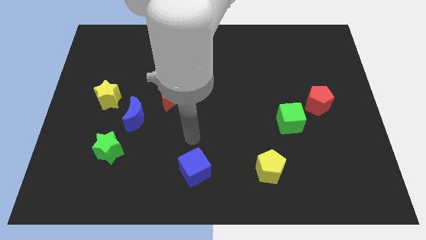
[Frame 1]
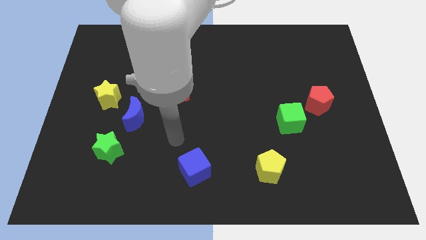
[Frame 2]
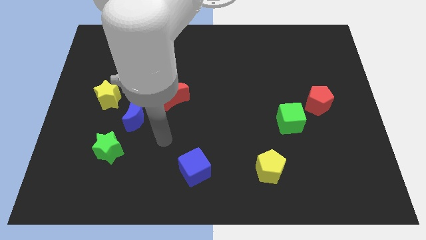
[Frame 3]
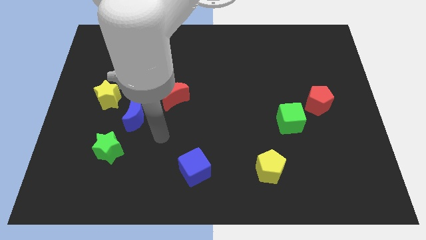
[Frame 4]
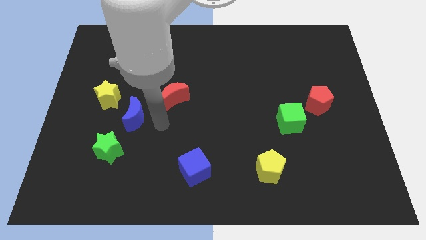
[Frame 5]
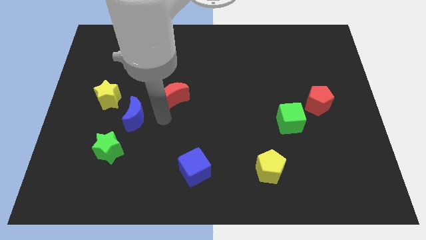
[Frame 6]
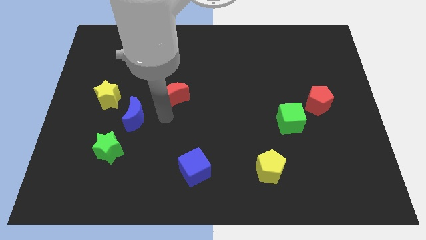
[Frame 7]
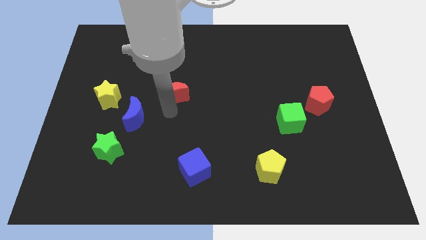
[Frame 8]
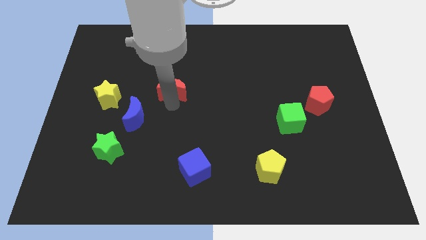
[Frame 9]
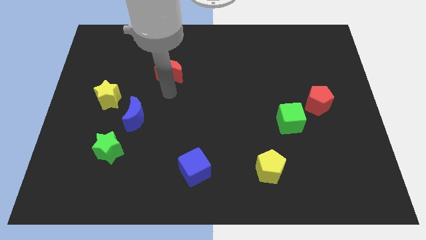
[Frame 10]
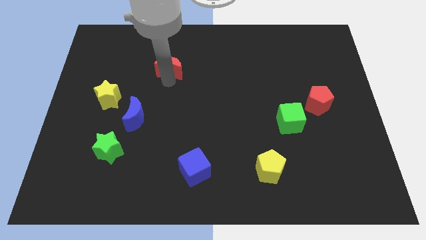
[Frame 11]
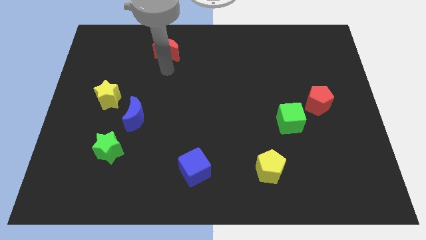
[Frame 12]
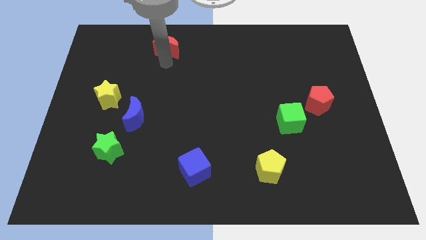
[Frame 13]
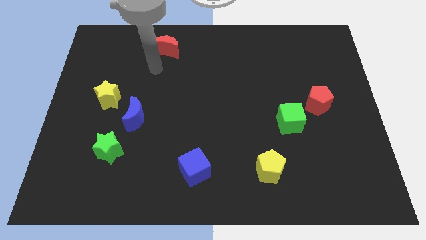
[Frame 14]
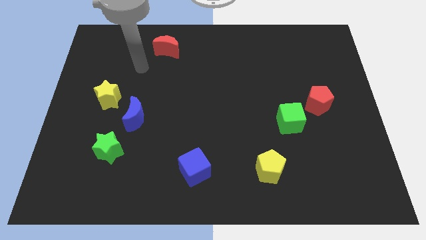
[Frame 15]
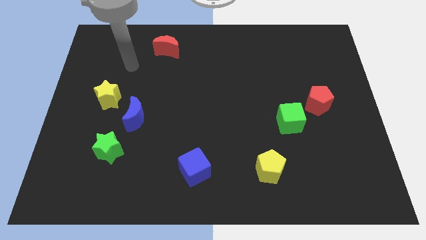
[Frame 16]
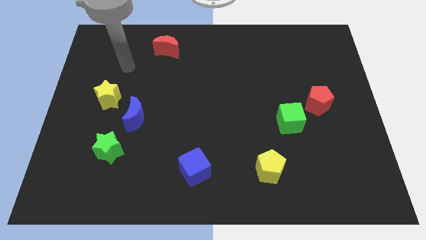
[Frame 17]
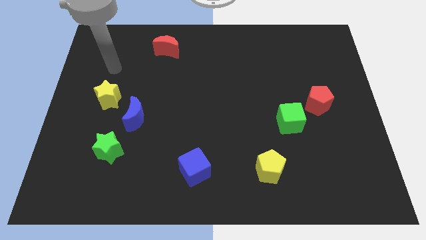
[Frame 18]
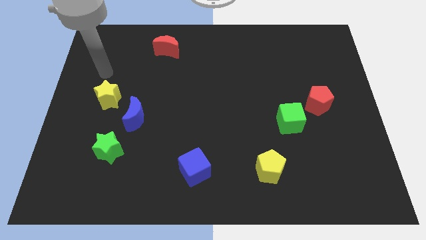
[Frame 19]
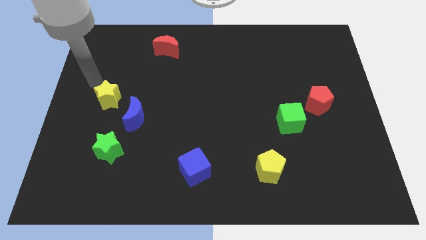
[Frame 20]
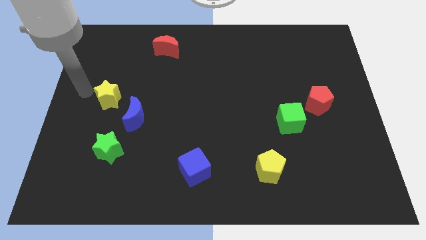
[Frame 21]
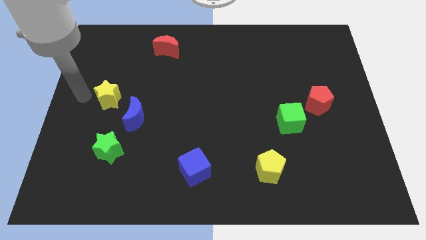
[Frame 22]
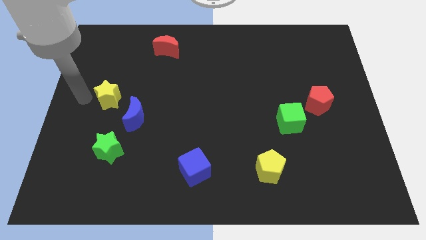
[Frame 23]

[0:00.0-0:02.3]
push the red crescent towards the top center of the board

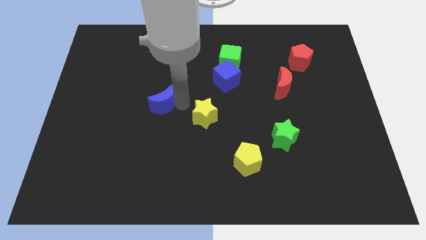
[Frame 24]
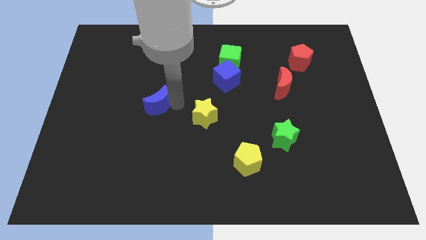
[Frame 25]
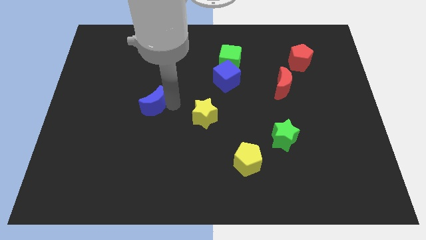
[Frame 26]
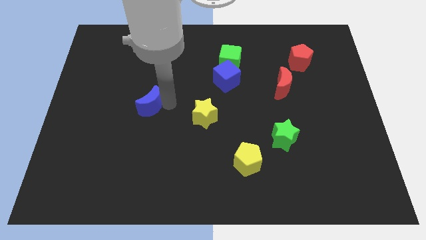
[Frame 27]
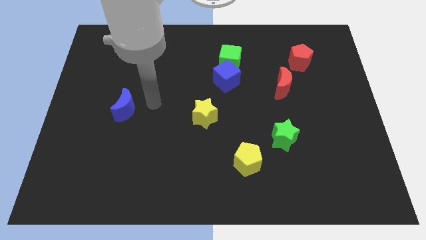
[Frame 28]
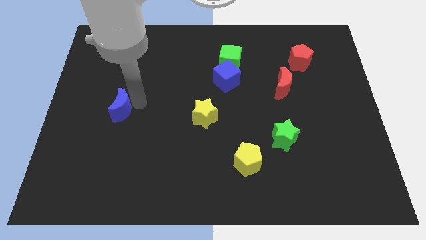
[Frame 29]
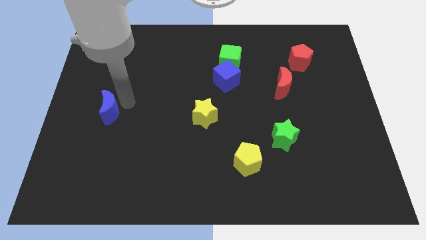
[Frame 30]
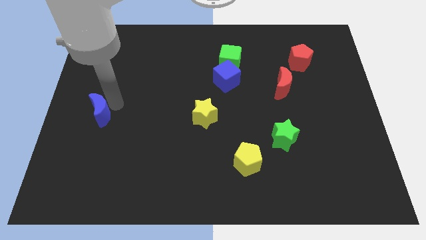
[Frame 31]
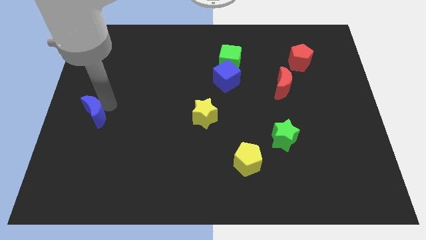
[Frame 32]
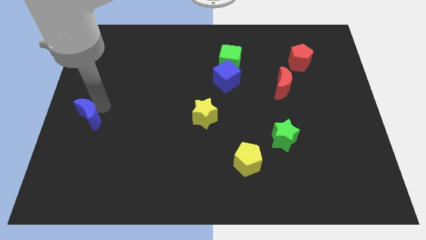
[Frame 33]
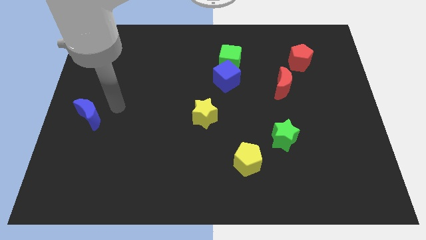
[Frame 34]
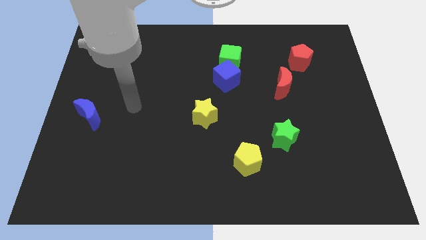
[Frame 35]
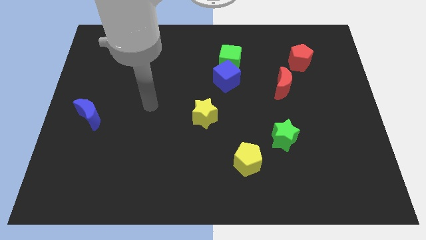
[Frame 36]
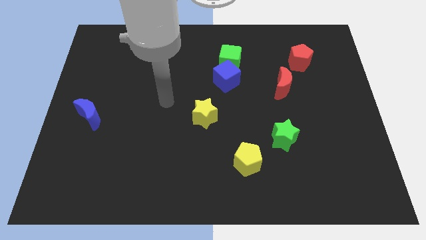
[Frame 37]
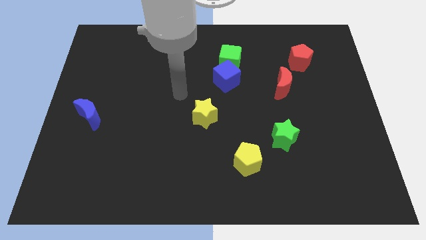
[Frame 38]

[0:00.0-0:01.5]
move the blue crescent towards the center left

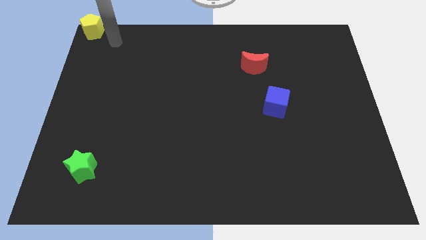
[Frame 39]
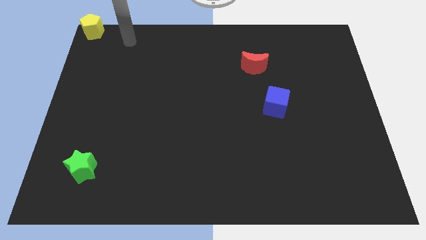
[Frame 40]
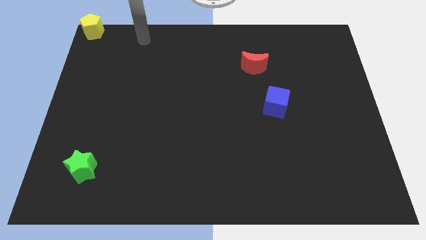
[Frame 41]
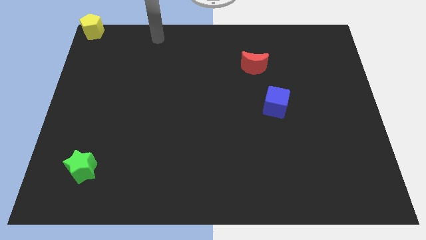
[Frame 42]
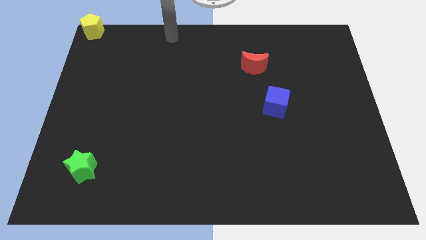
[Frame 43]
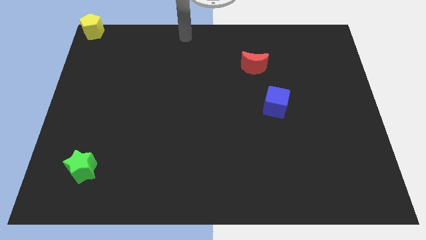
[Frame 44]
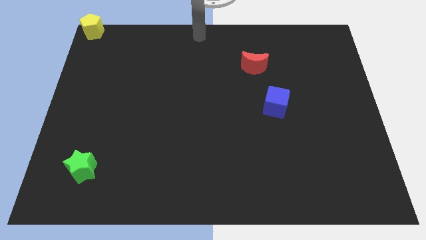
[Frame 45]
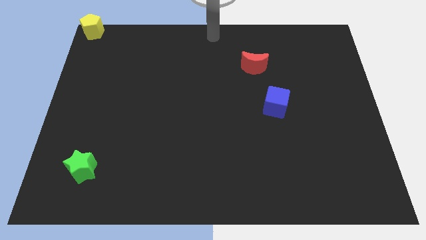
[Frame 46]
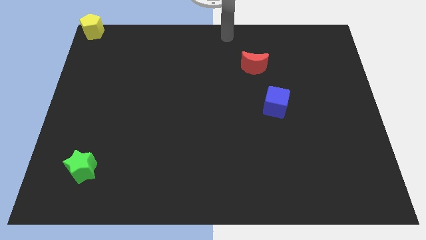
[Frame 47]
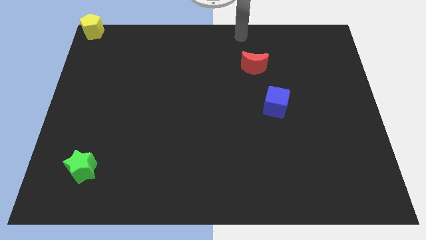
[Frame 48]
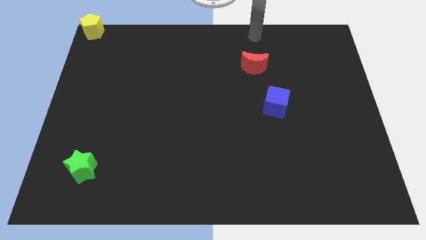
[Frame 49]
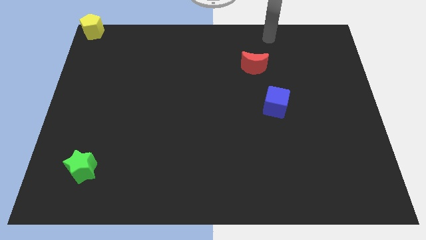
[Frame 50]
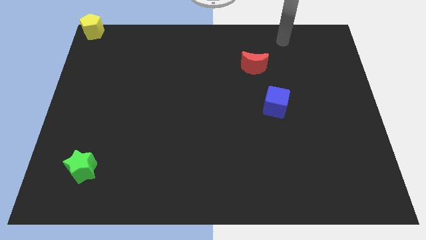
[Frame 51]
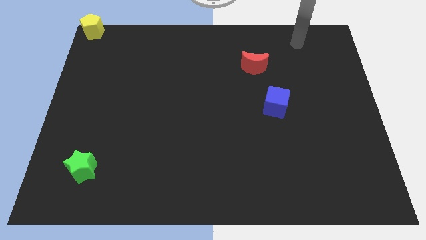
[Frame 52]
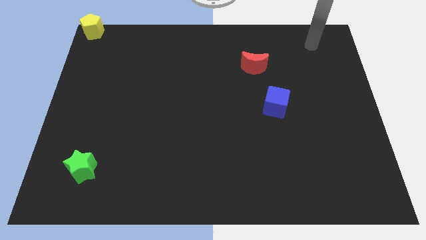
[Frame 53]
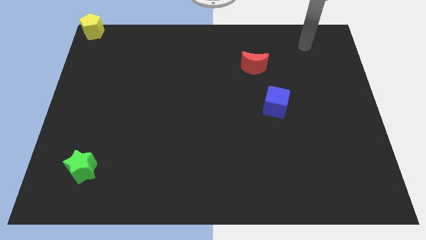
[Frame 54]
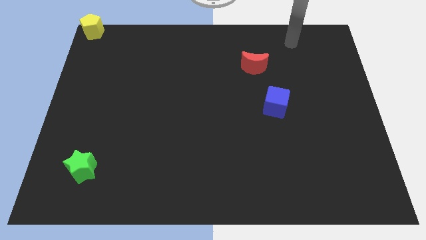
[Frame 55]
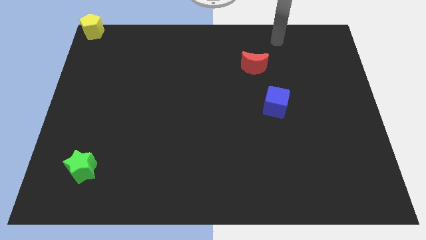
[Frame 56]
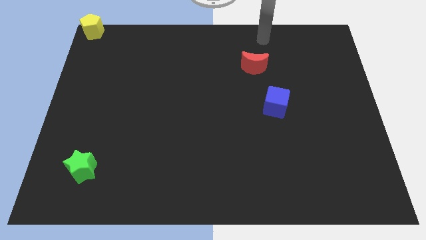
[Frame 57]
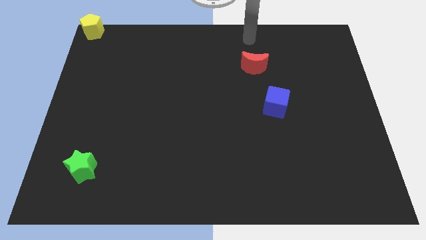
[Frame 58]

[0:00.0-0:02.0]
point your hand at the top side of the red moon

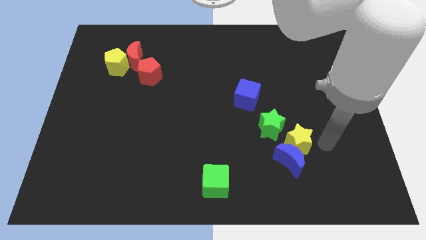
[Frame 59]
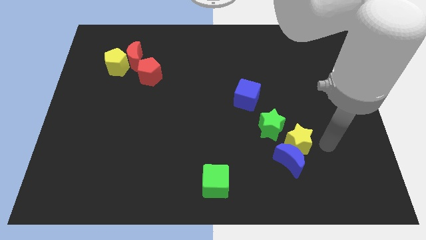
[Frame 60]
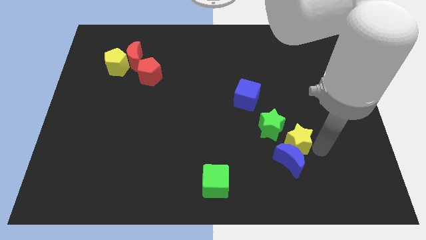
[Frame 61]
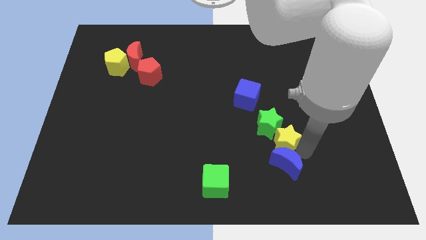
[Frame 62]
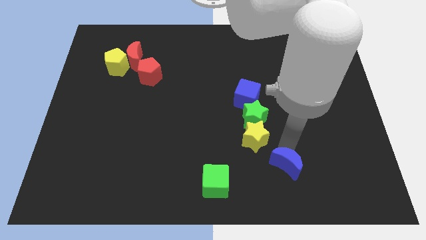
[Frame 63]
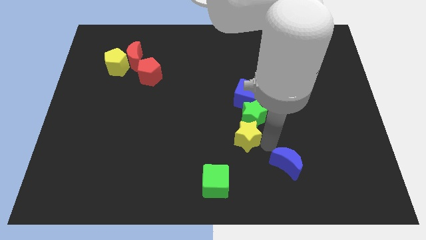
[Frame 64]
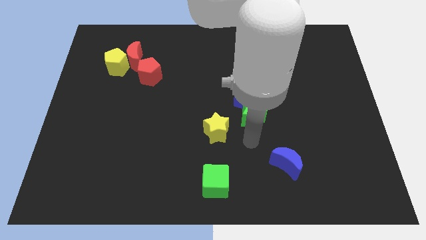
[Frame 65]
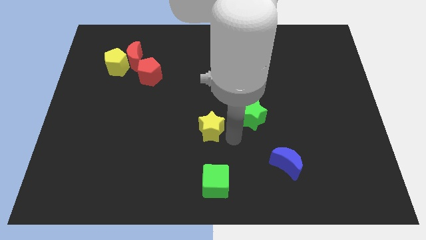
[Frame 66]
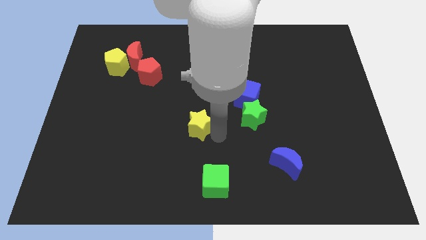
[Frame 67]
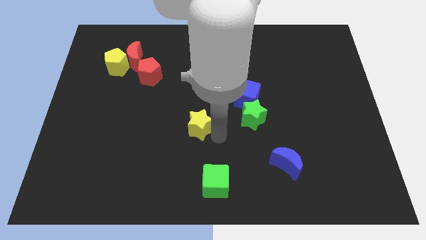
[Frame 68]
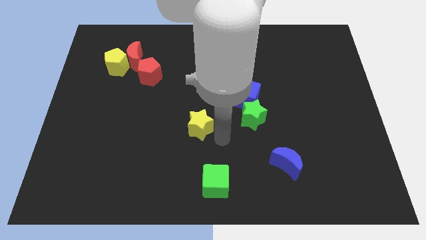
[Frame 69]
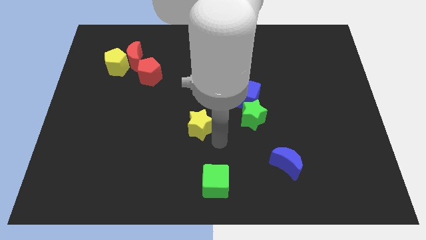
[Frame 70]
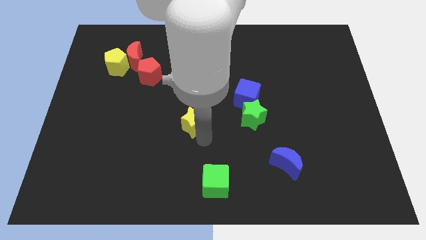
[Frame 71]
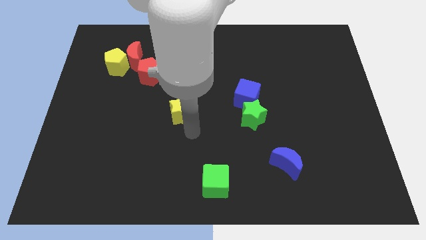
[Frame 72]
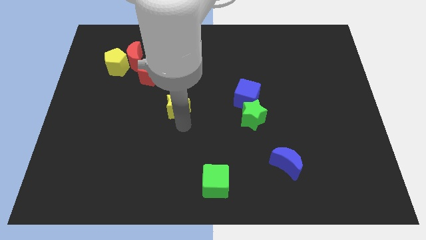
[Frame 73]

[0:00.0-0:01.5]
move yellow star away from the blue moon

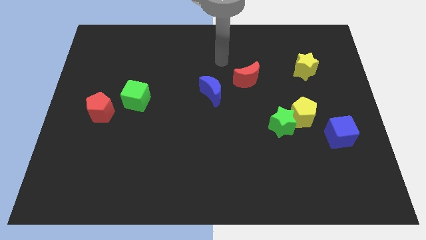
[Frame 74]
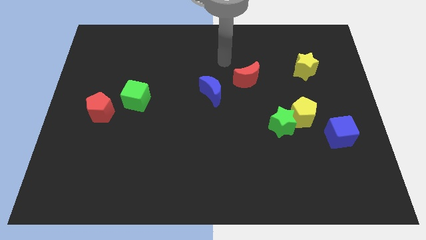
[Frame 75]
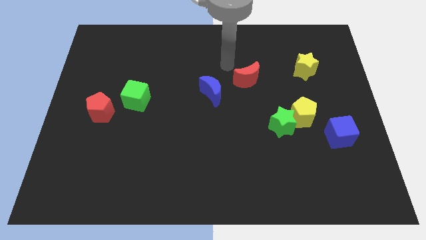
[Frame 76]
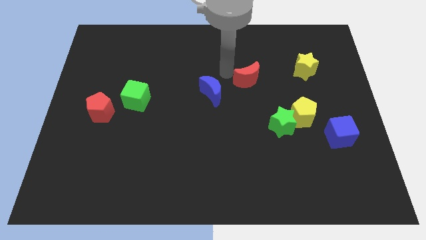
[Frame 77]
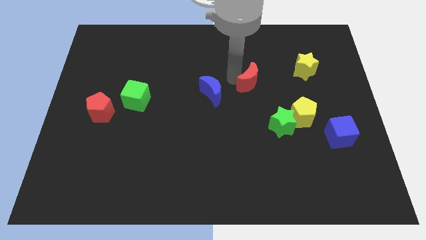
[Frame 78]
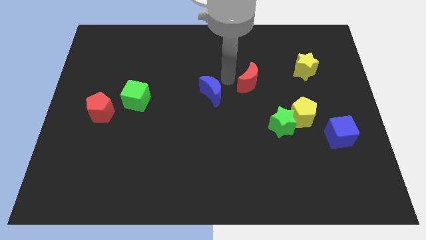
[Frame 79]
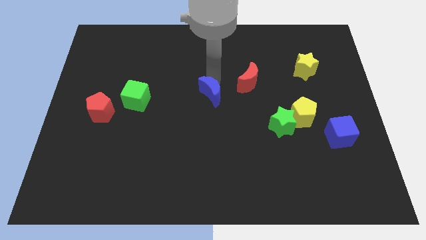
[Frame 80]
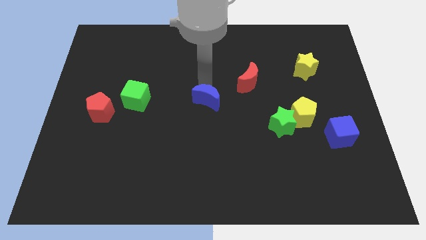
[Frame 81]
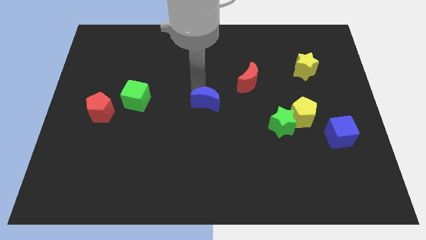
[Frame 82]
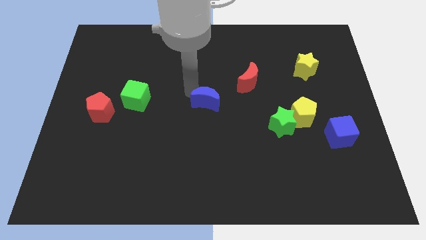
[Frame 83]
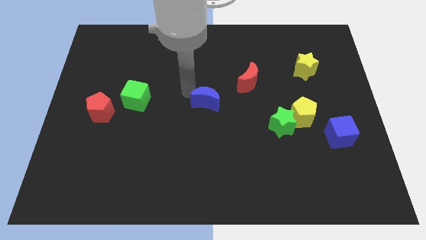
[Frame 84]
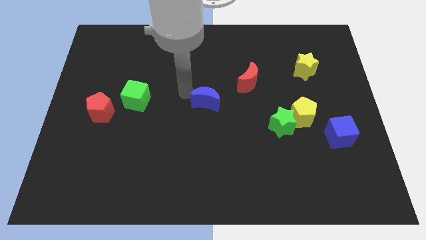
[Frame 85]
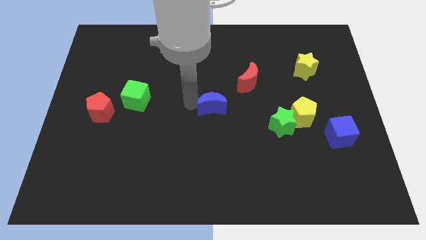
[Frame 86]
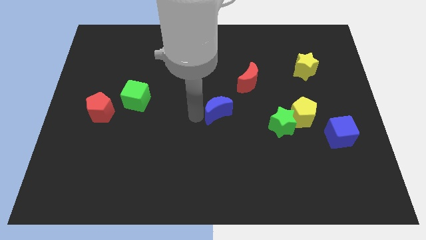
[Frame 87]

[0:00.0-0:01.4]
slightly push the blue moon to the center

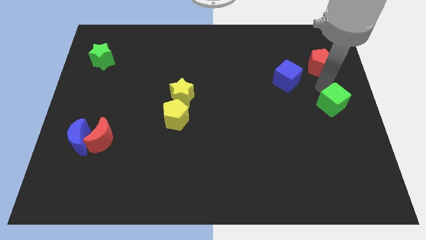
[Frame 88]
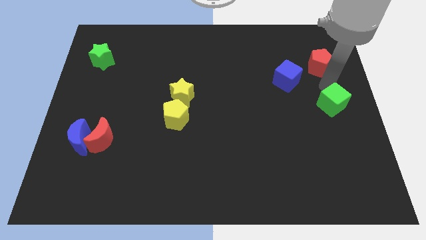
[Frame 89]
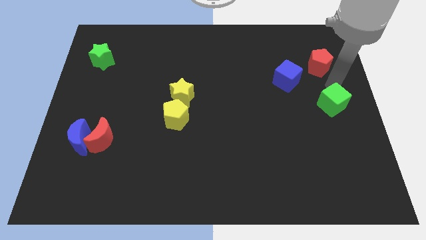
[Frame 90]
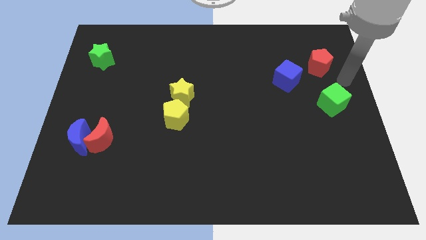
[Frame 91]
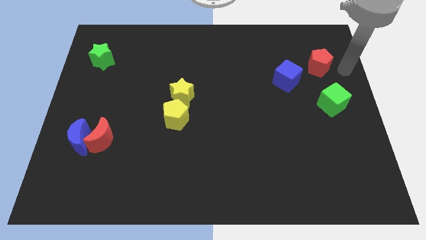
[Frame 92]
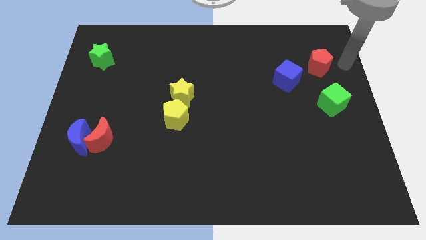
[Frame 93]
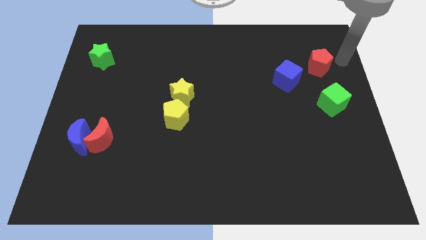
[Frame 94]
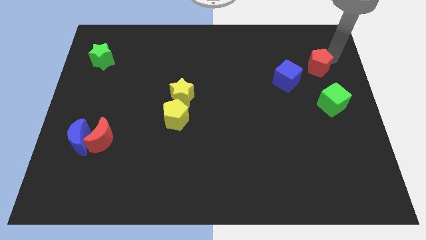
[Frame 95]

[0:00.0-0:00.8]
point your arm at the top right side of red pentagon
